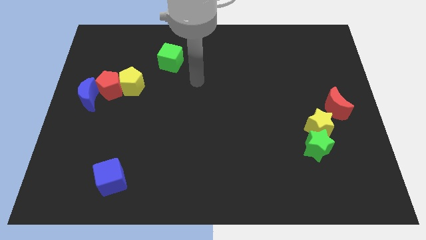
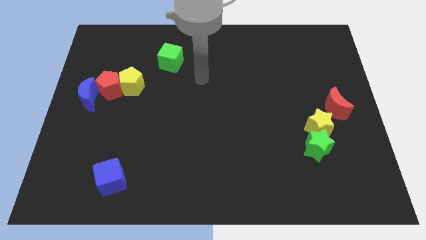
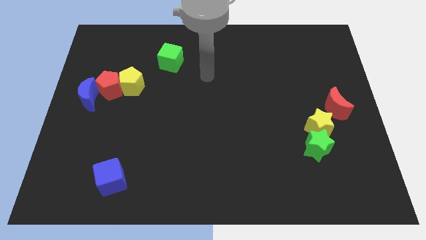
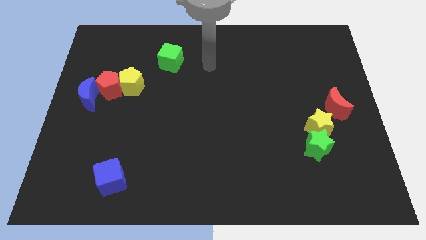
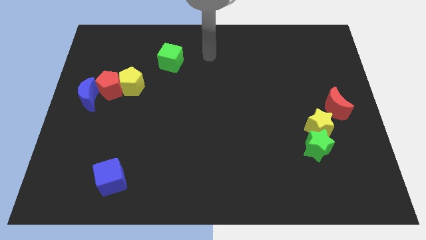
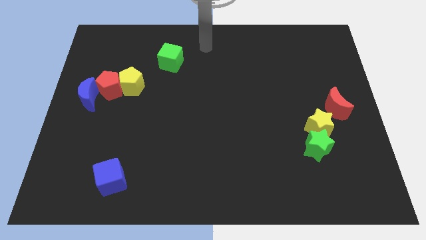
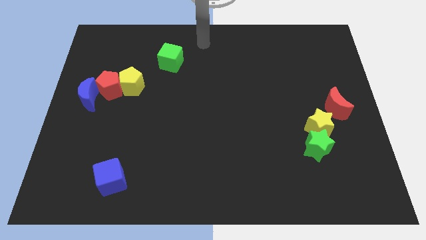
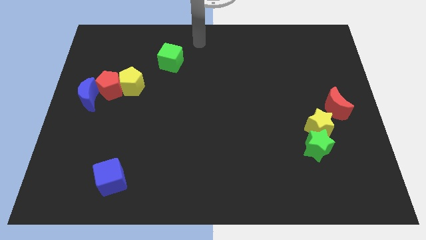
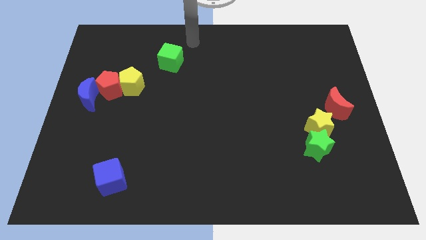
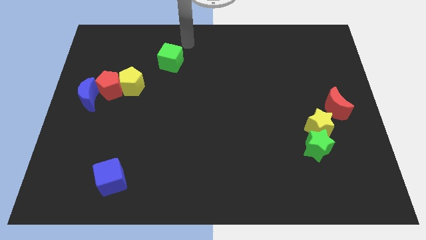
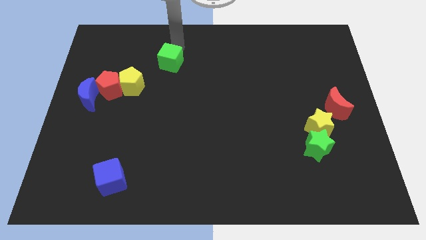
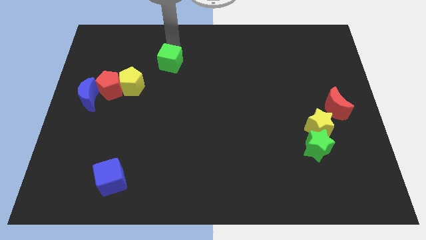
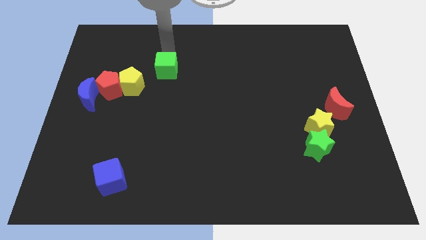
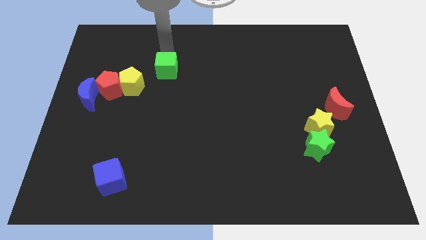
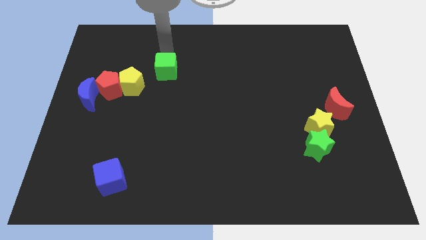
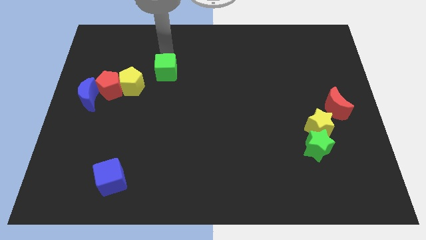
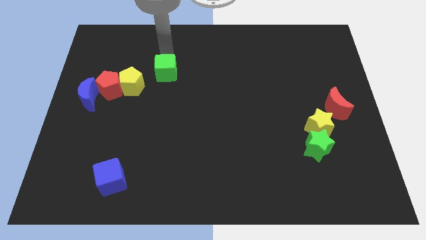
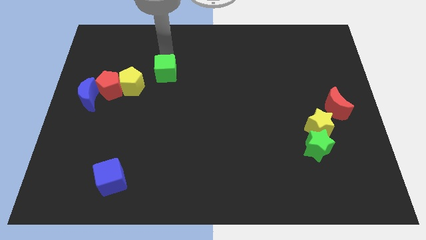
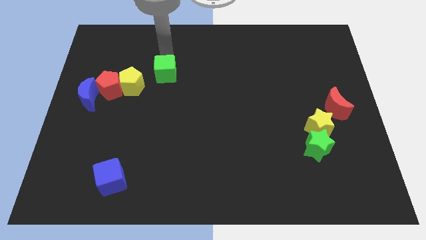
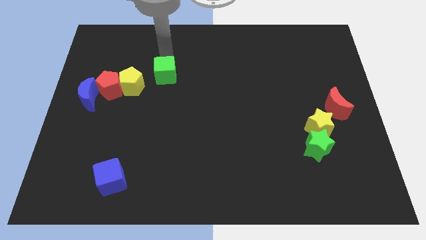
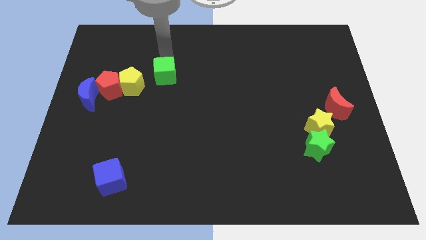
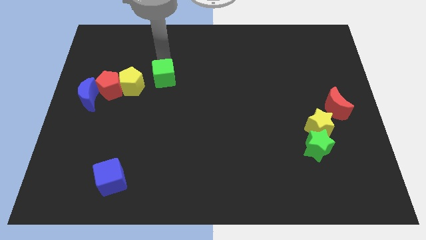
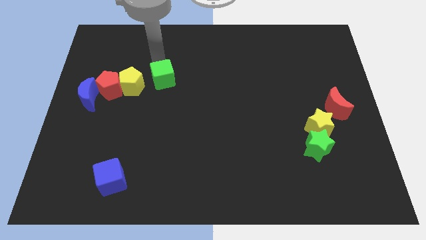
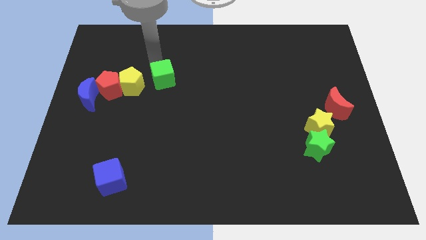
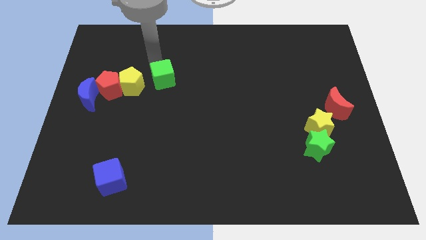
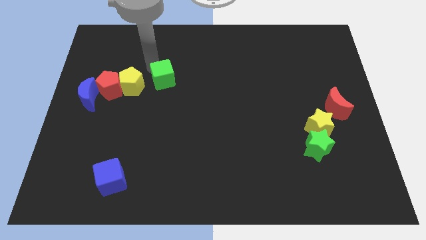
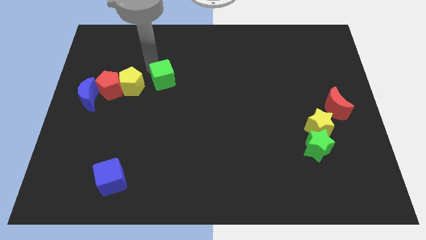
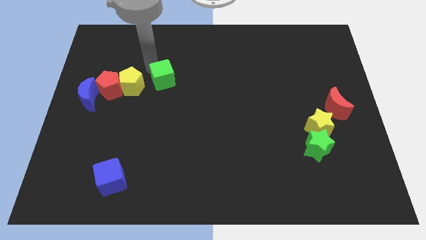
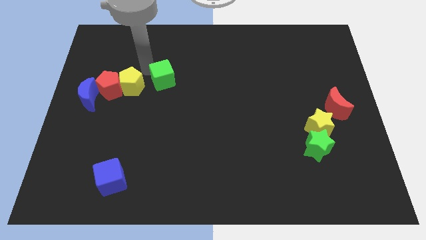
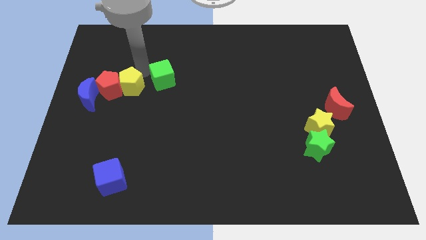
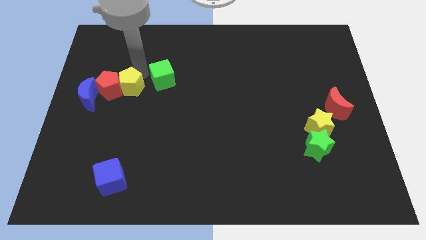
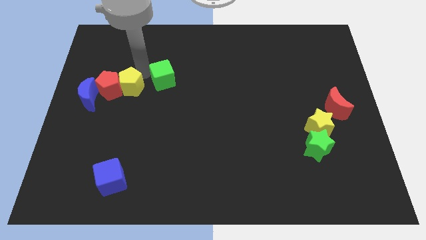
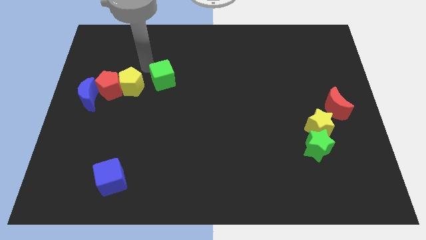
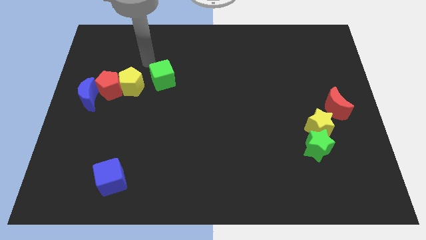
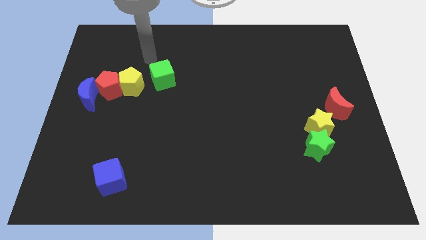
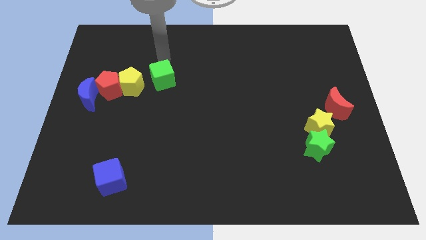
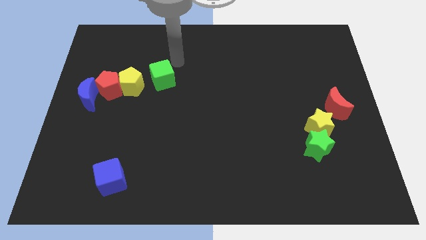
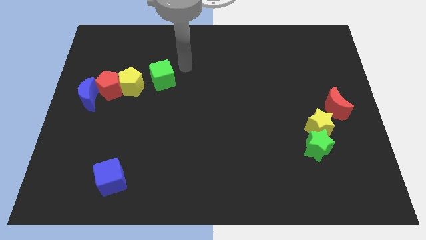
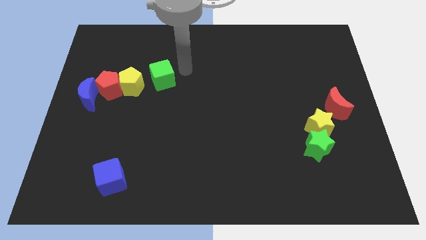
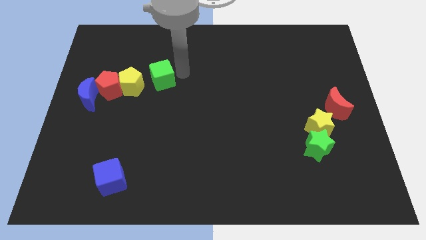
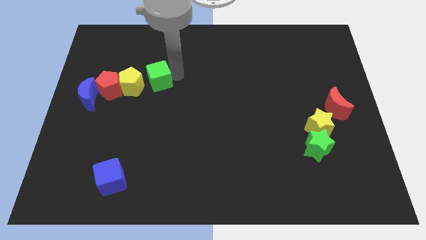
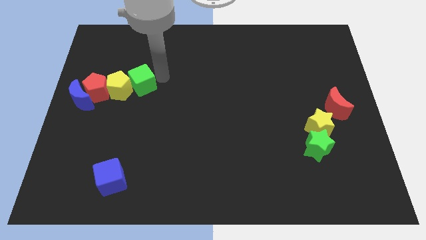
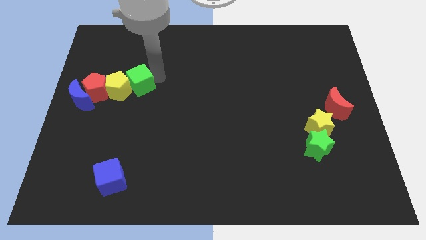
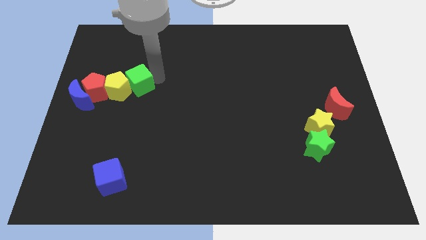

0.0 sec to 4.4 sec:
move the green cube into the yellow pentagon

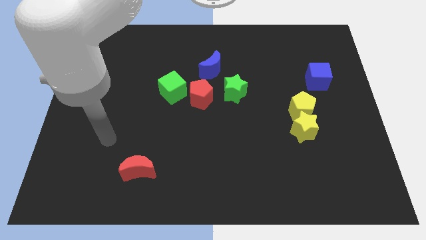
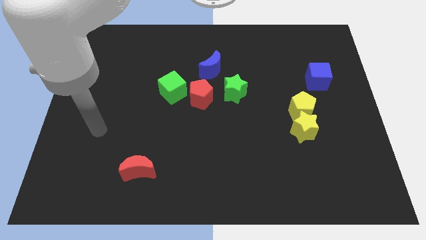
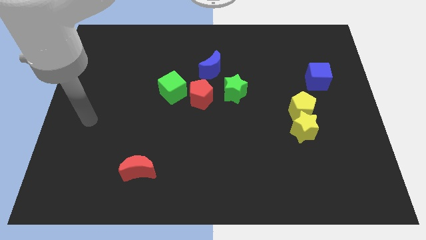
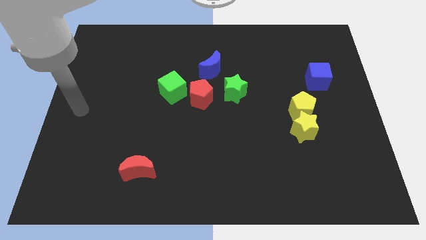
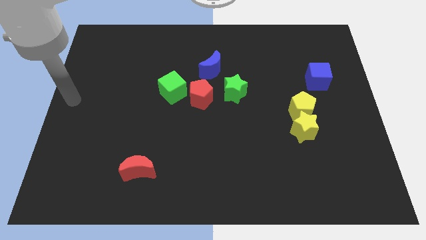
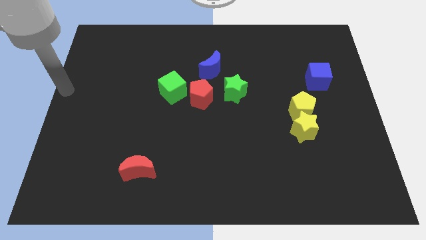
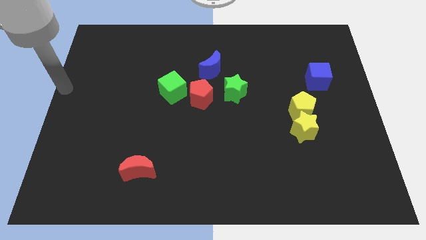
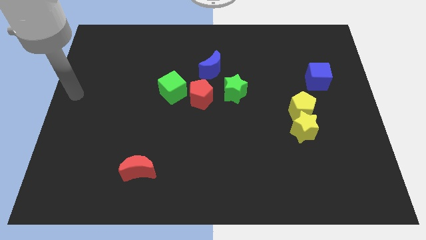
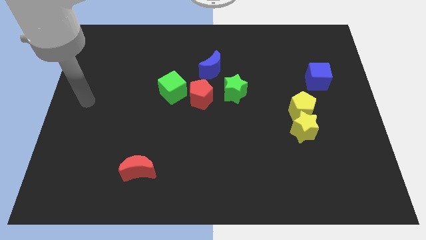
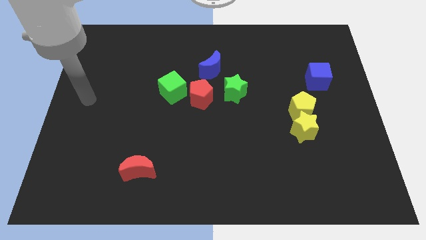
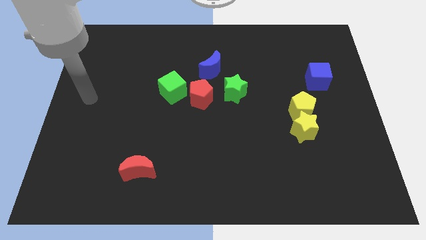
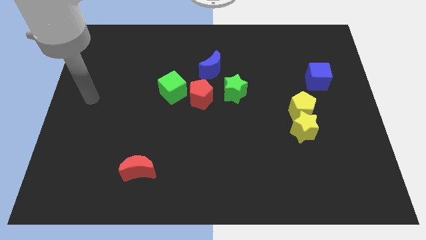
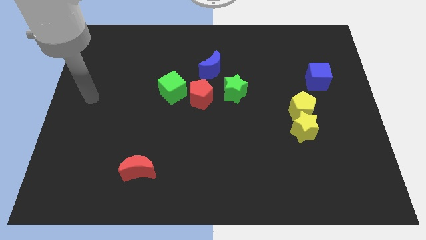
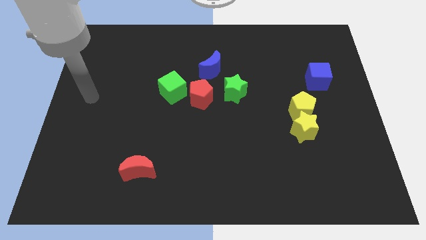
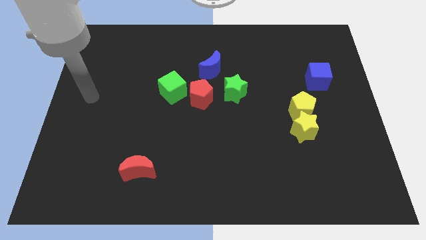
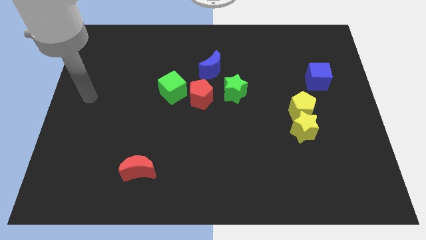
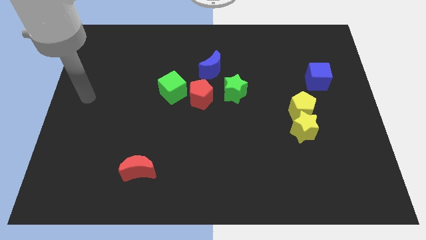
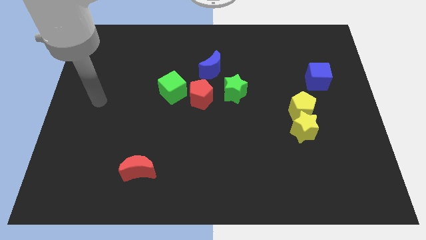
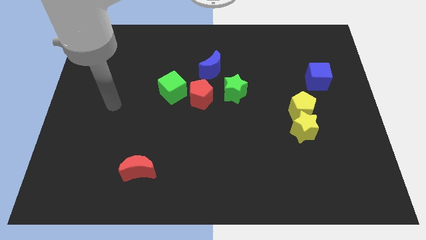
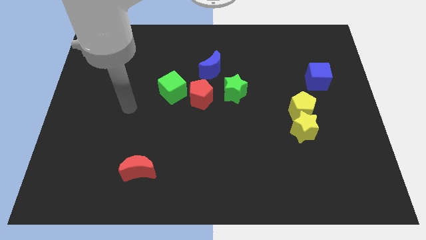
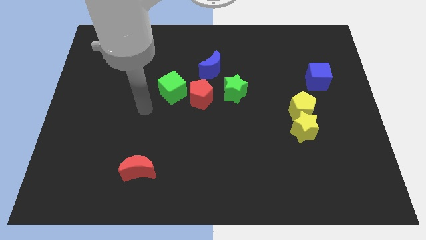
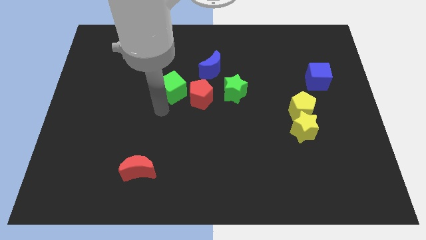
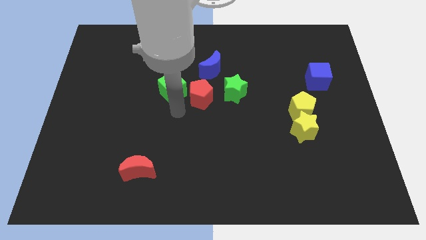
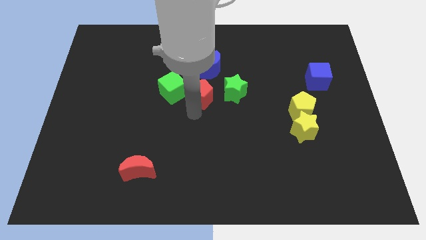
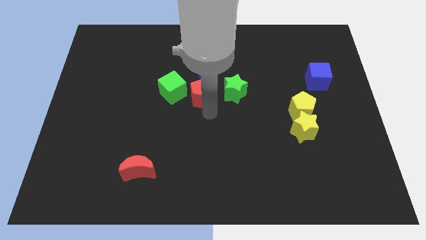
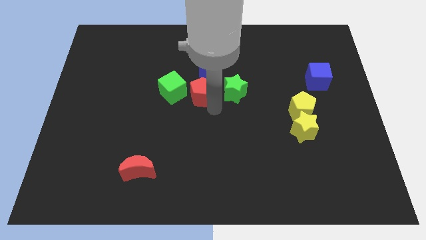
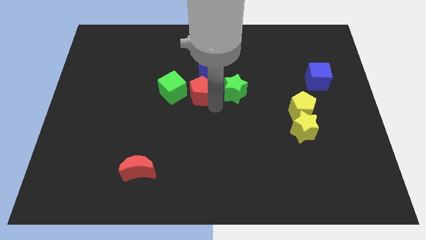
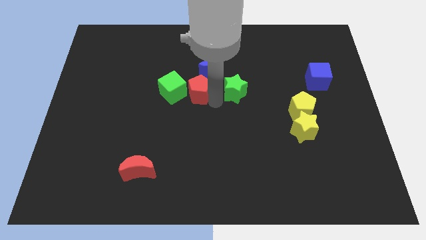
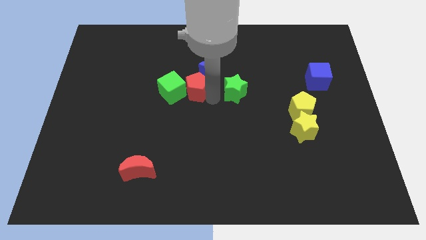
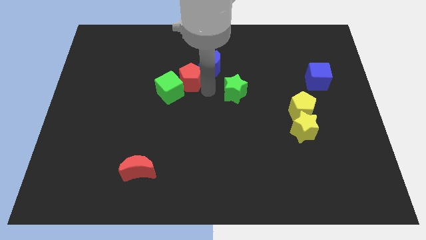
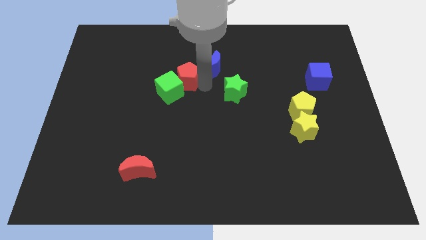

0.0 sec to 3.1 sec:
push the red pentagon to the top right of the green cube

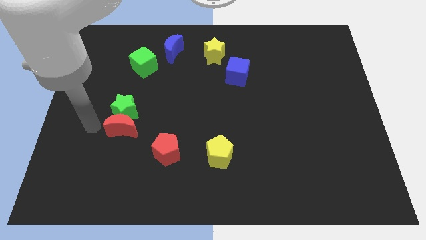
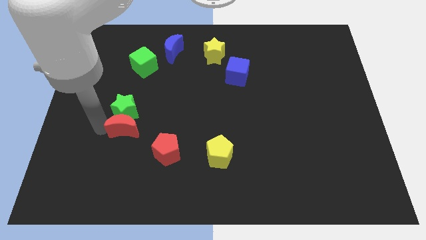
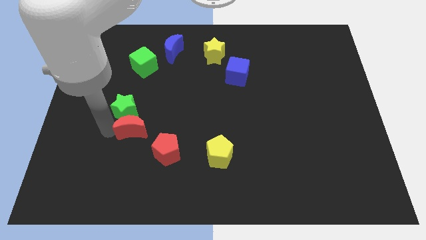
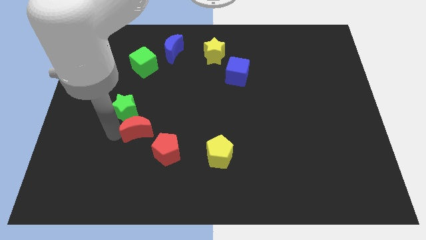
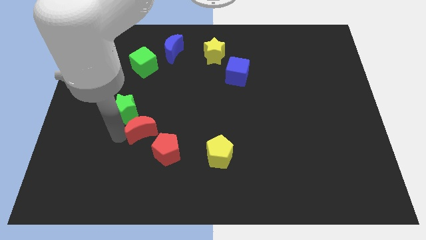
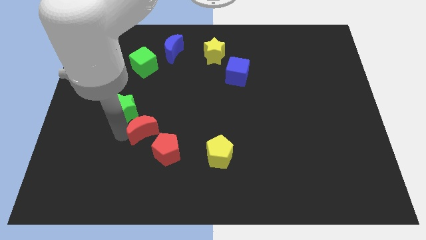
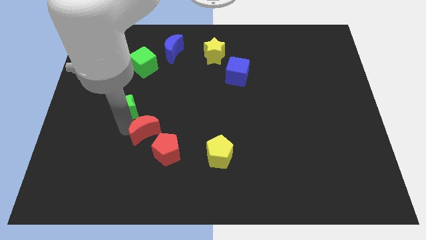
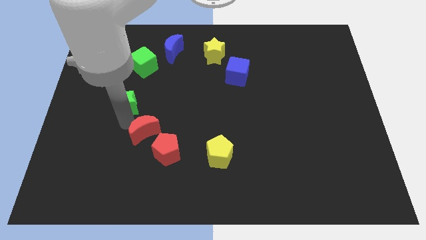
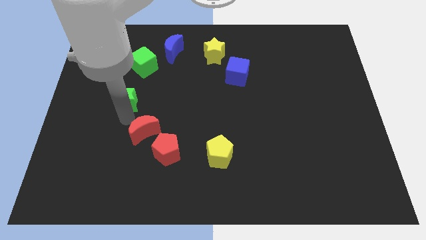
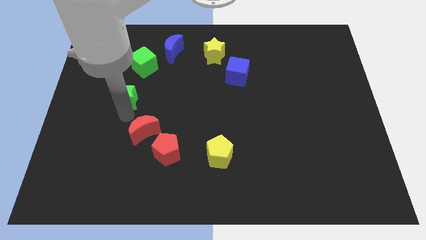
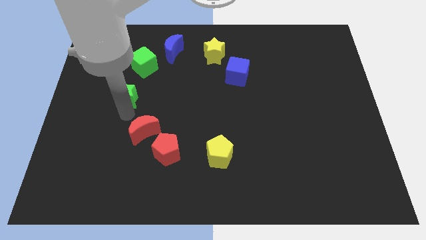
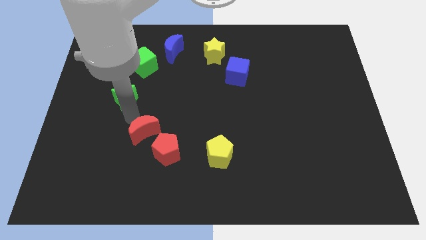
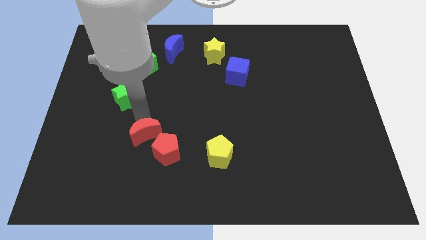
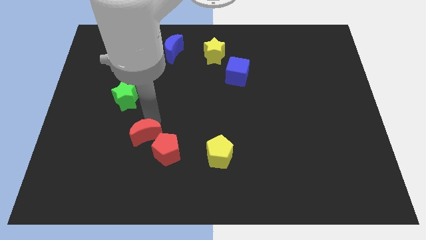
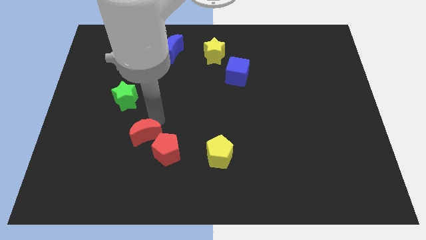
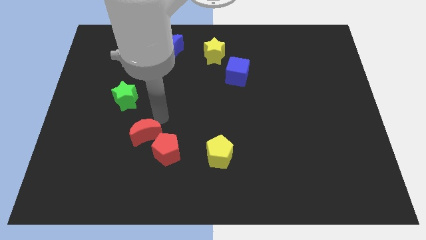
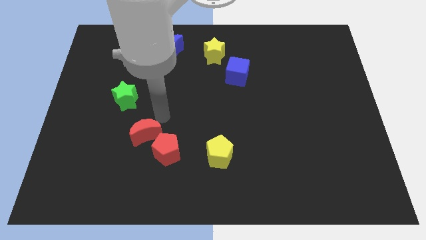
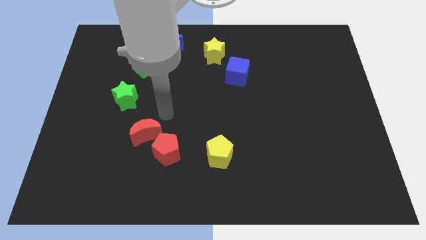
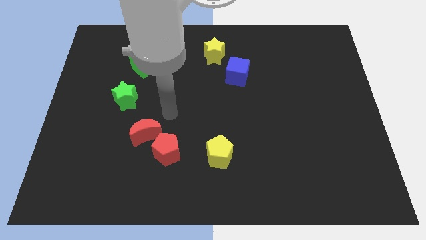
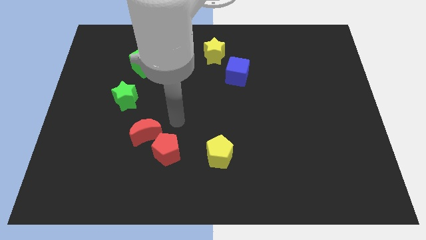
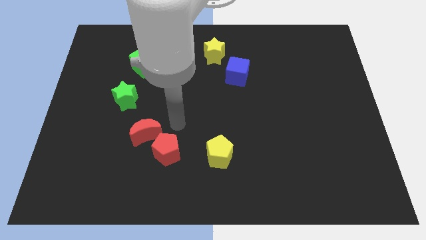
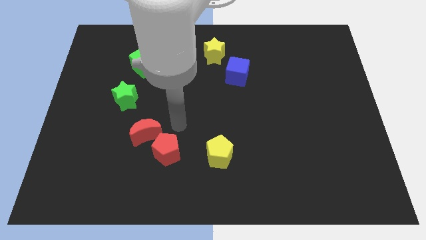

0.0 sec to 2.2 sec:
separate green star and red moon
